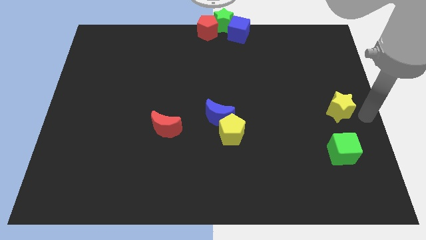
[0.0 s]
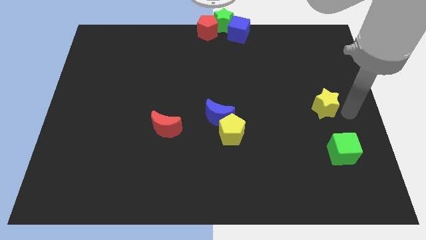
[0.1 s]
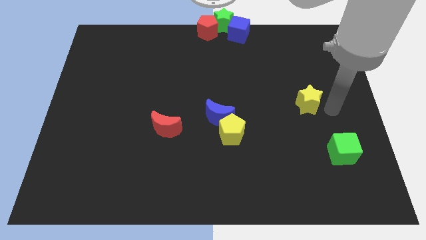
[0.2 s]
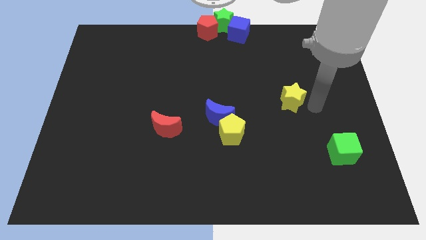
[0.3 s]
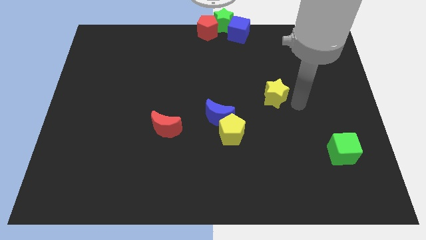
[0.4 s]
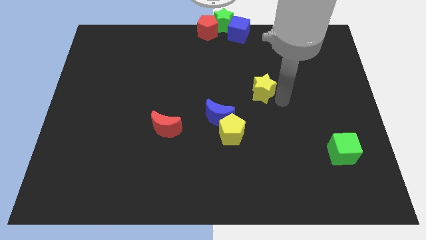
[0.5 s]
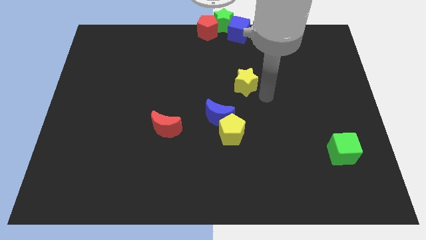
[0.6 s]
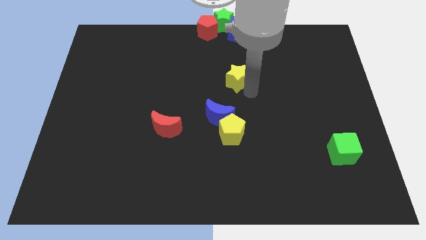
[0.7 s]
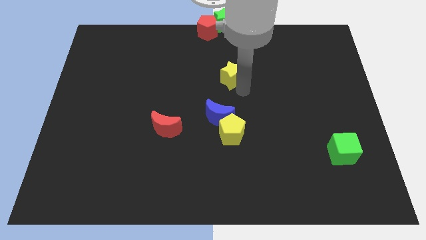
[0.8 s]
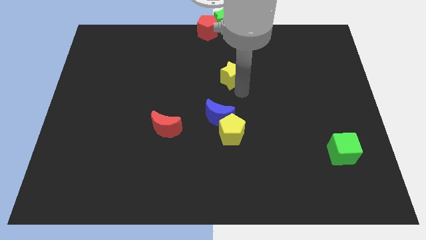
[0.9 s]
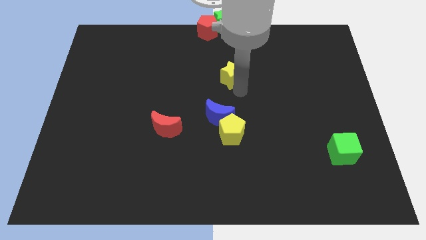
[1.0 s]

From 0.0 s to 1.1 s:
push the yellow star to the top of the blue crescent

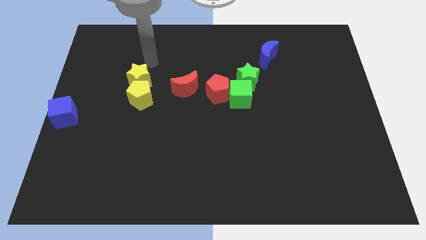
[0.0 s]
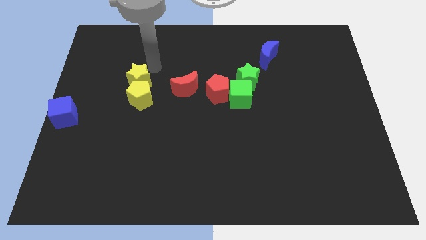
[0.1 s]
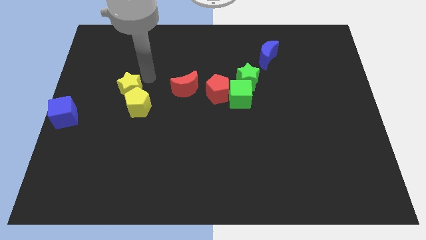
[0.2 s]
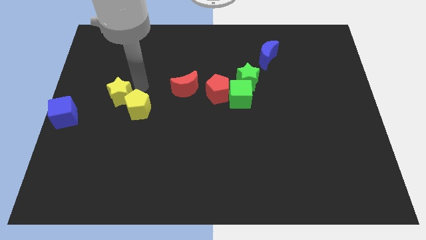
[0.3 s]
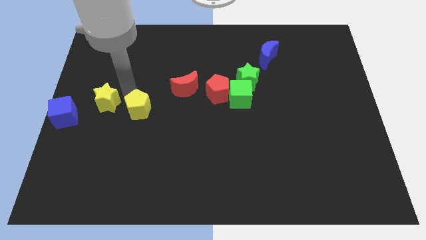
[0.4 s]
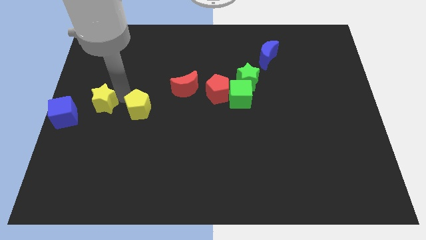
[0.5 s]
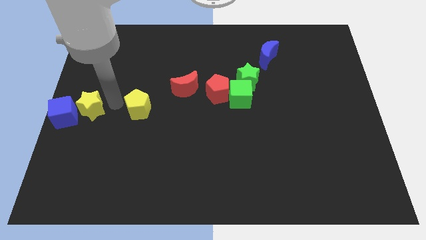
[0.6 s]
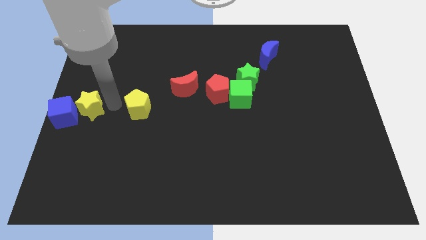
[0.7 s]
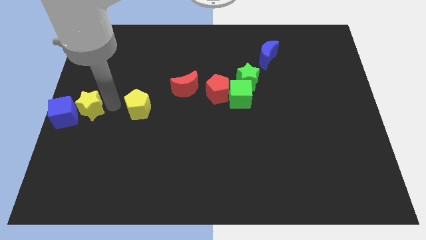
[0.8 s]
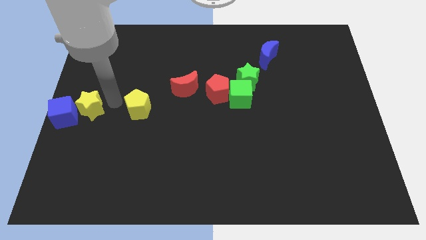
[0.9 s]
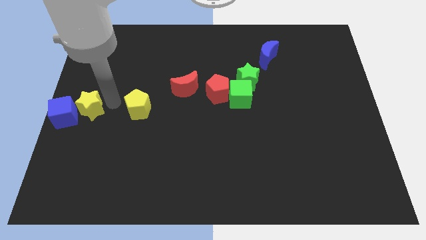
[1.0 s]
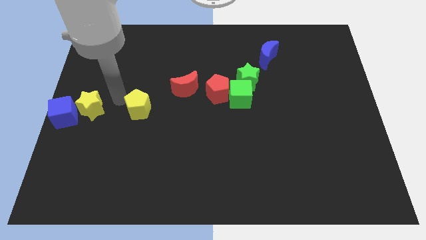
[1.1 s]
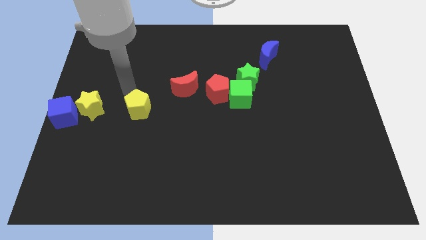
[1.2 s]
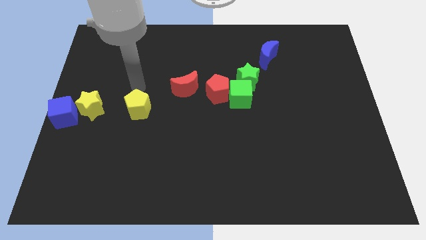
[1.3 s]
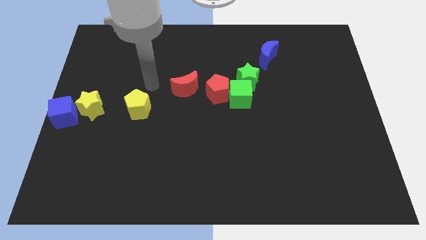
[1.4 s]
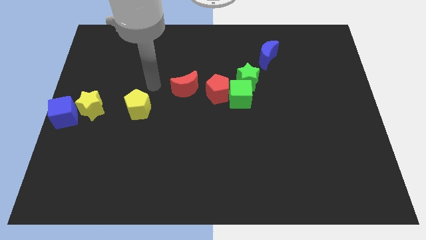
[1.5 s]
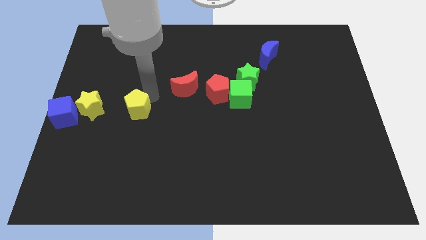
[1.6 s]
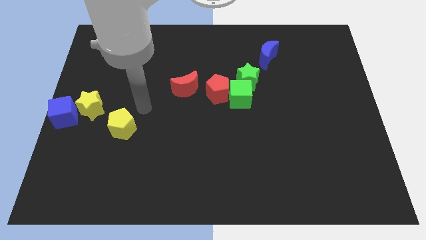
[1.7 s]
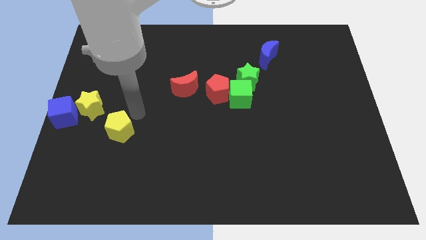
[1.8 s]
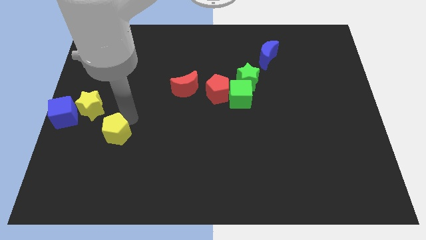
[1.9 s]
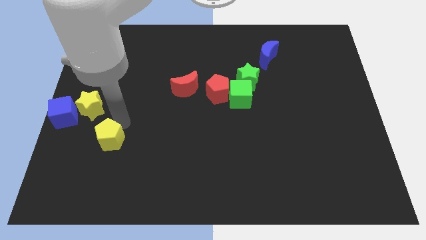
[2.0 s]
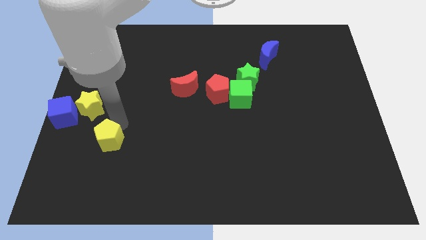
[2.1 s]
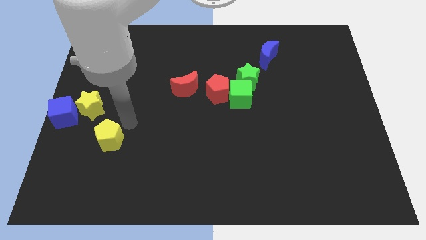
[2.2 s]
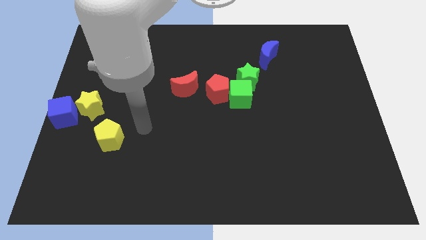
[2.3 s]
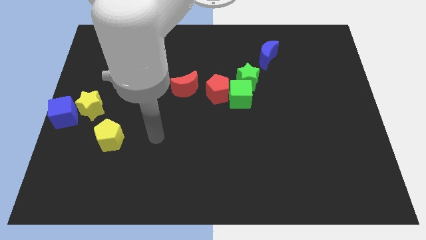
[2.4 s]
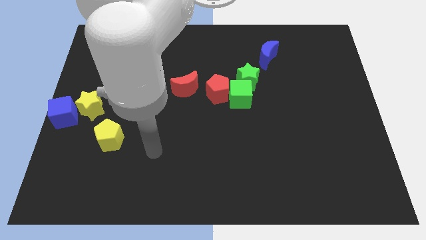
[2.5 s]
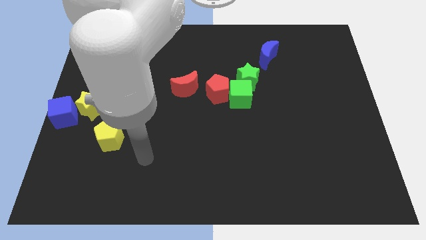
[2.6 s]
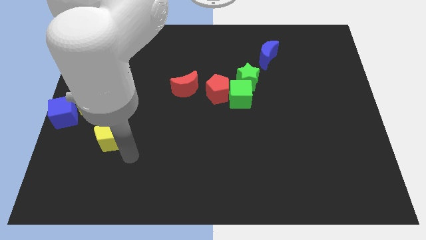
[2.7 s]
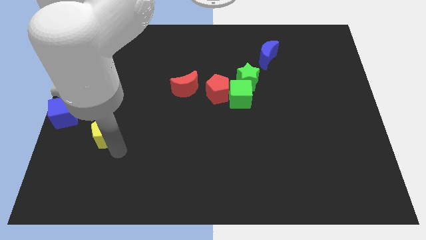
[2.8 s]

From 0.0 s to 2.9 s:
place the yellow pentagon diagonally bottom right to the blue cube

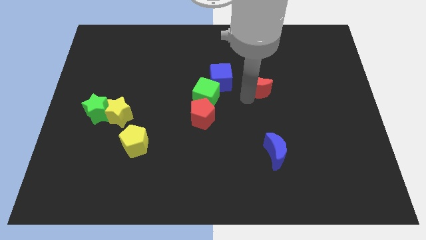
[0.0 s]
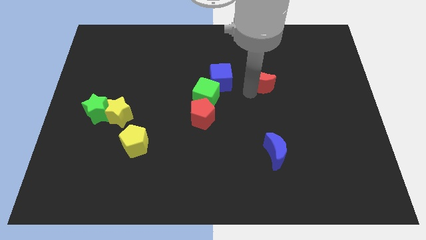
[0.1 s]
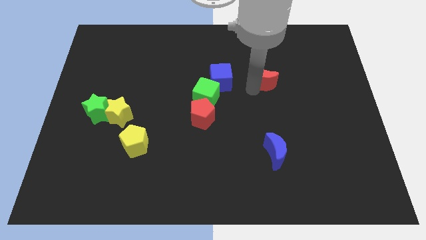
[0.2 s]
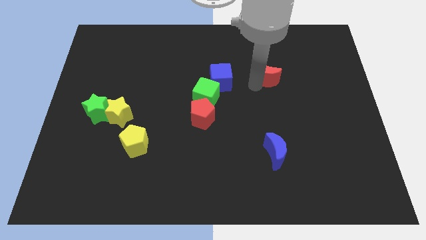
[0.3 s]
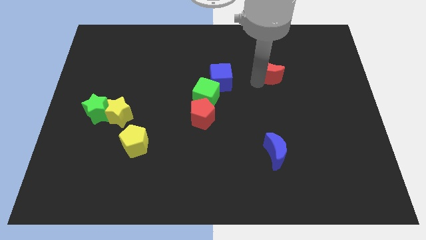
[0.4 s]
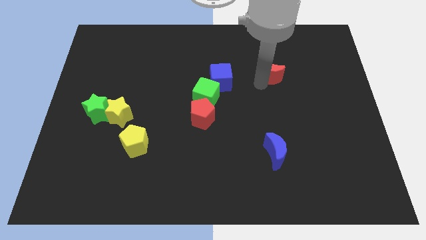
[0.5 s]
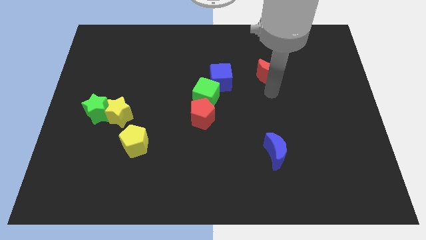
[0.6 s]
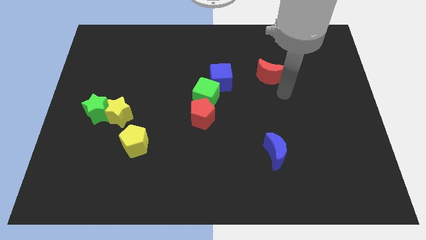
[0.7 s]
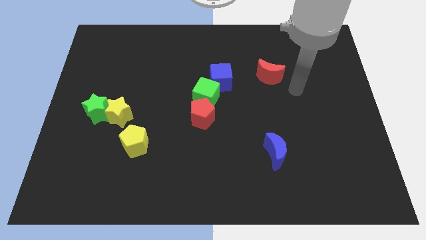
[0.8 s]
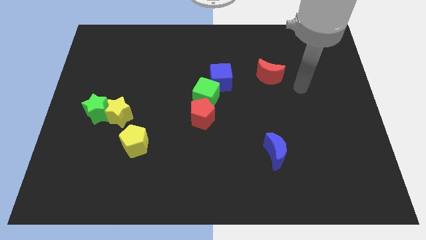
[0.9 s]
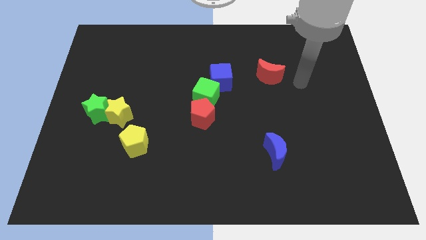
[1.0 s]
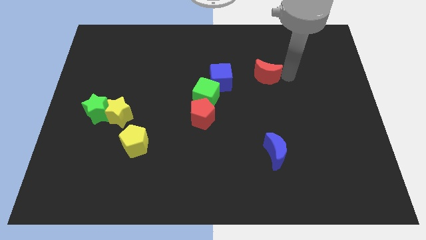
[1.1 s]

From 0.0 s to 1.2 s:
push the red crescent slightly upwards

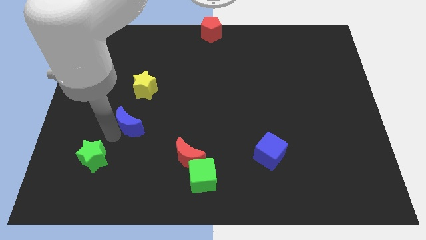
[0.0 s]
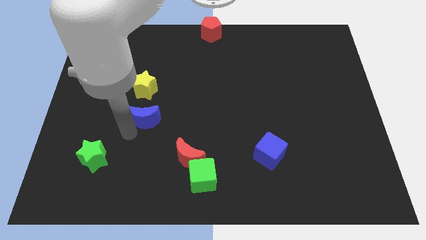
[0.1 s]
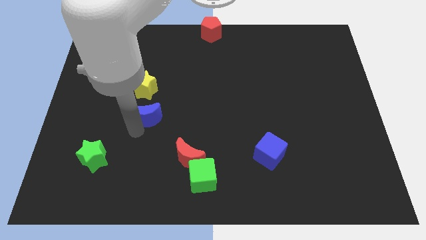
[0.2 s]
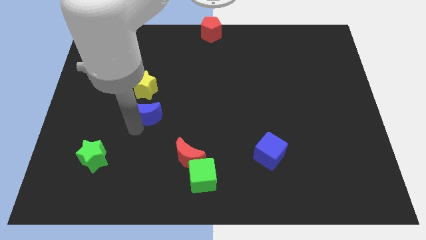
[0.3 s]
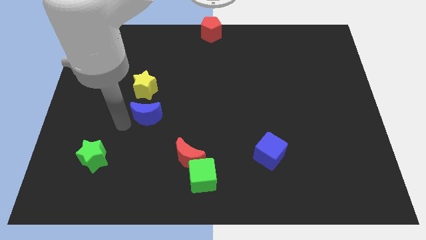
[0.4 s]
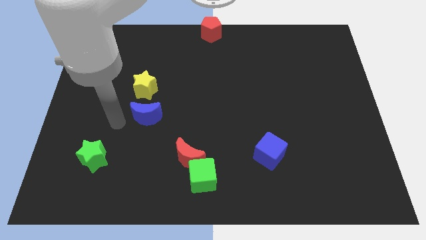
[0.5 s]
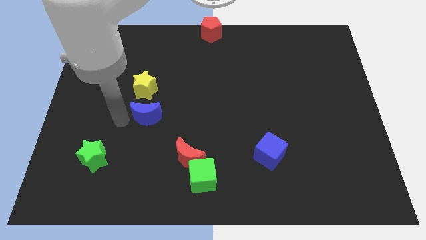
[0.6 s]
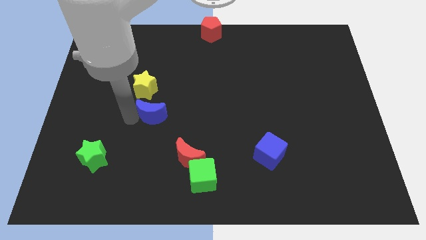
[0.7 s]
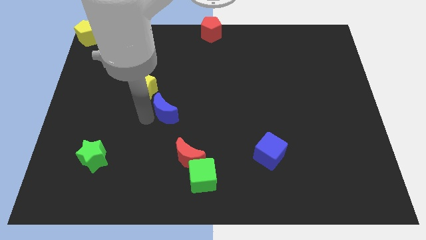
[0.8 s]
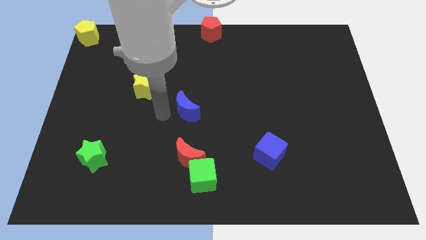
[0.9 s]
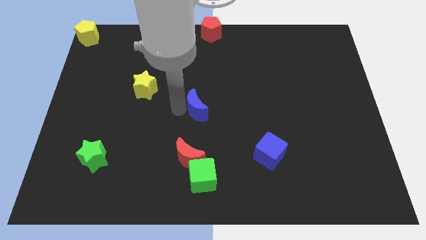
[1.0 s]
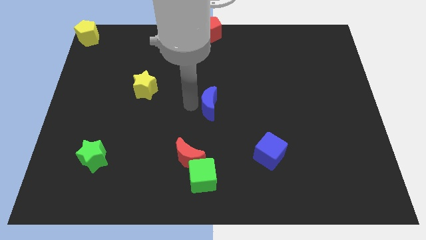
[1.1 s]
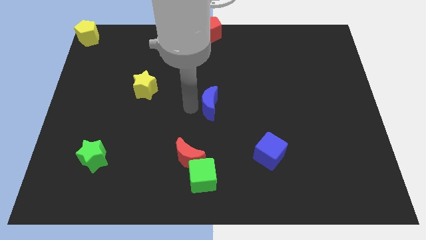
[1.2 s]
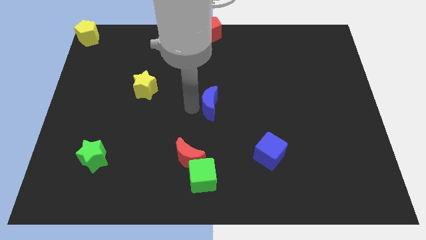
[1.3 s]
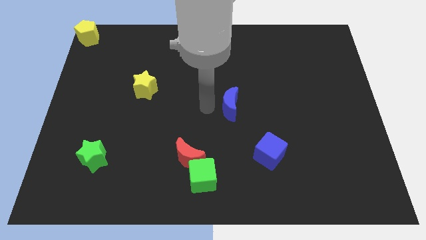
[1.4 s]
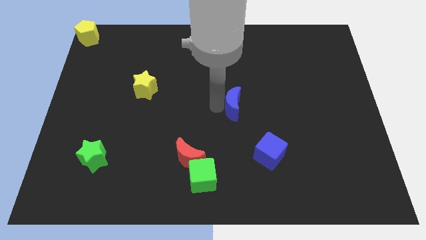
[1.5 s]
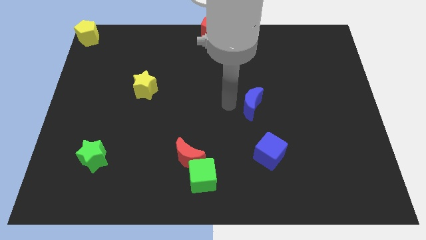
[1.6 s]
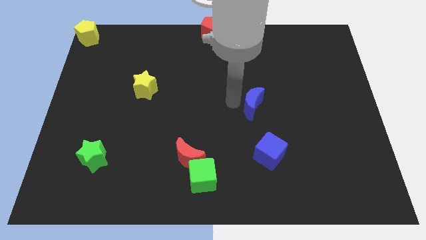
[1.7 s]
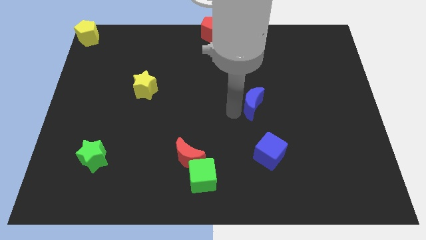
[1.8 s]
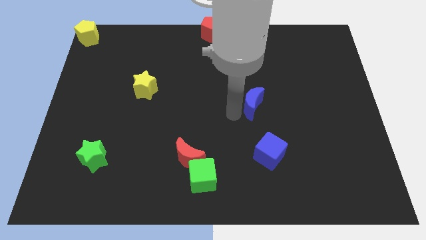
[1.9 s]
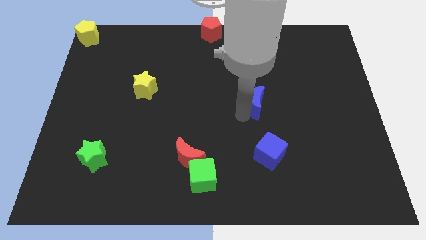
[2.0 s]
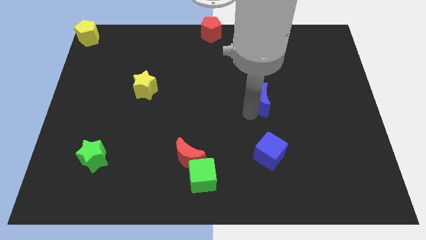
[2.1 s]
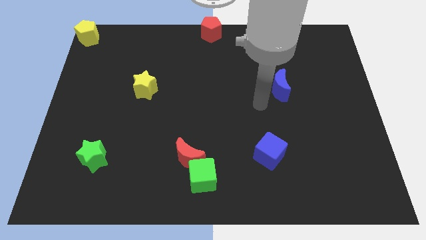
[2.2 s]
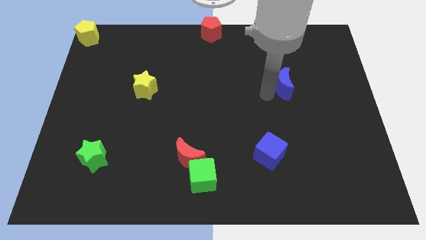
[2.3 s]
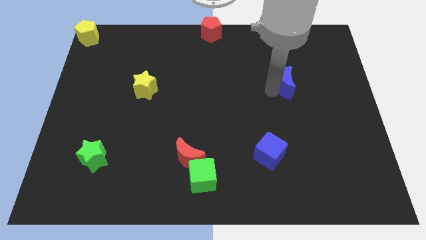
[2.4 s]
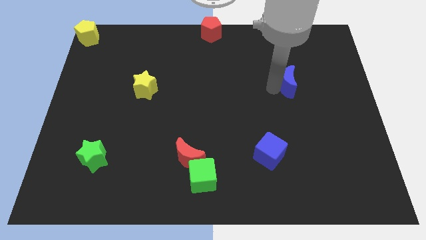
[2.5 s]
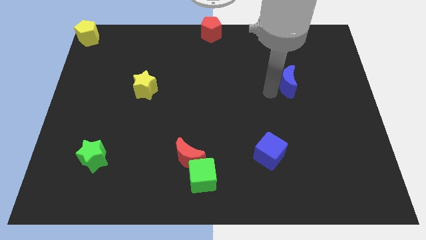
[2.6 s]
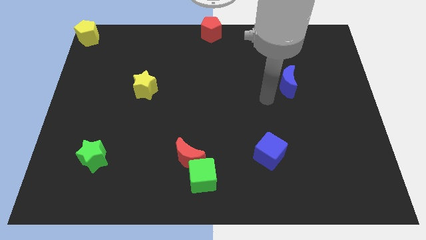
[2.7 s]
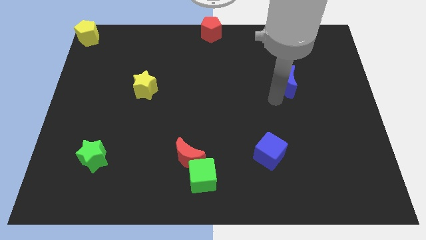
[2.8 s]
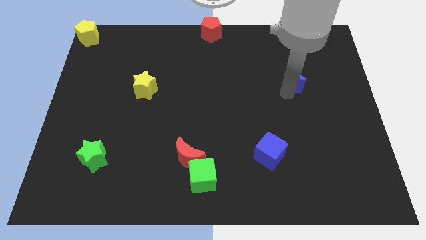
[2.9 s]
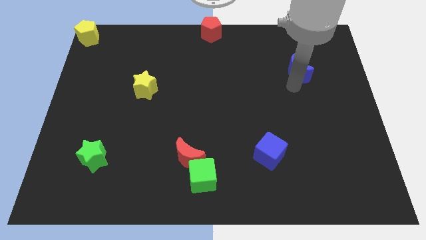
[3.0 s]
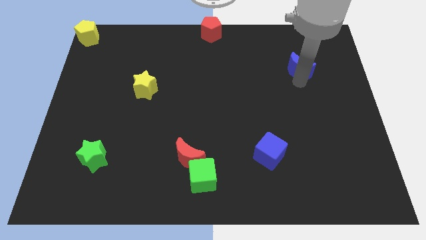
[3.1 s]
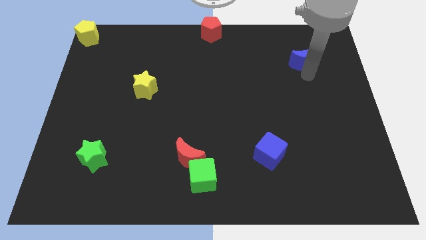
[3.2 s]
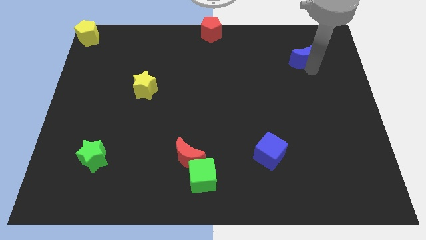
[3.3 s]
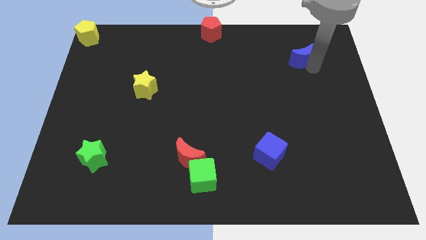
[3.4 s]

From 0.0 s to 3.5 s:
put the blue moon diagonally top right to the blue cube

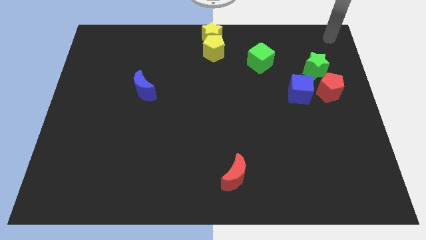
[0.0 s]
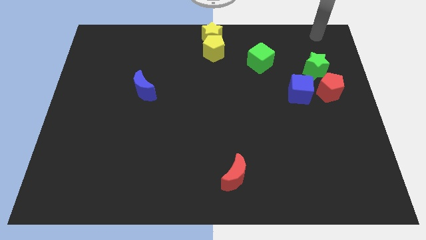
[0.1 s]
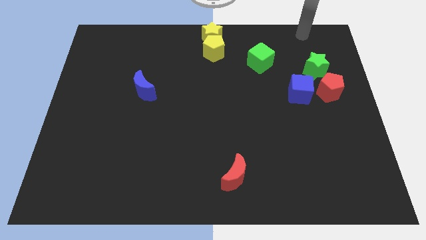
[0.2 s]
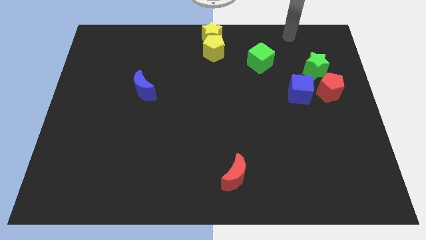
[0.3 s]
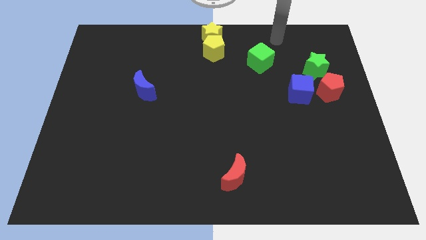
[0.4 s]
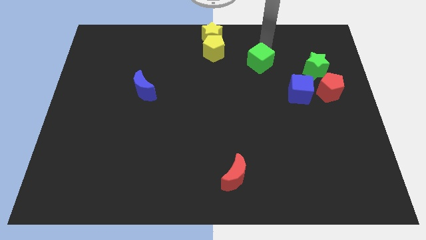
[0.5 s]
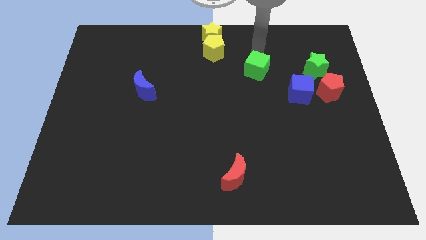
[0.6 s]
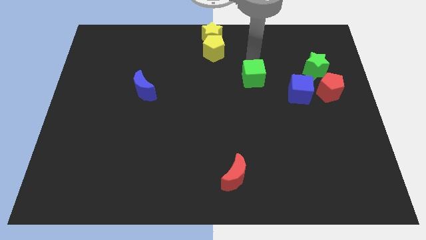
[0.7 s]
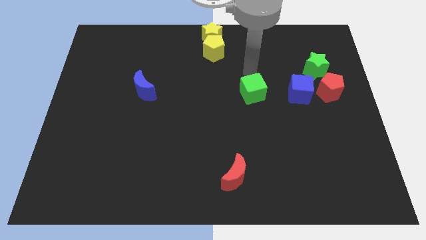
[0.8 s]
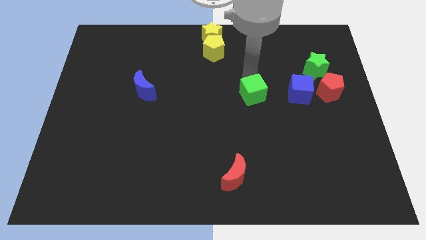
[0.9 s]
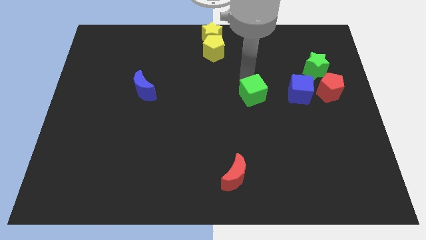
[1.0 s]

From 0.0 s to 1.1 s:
slide green cube down to left of blue cube
